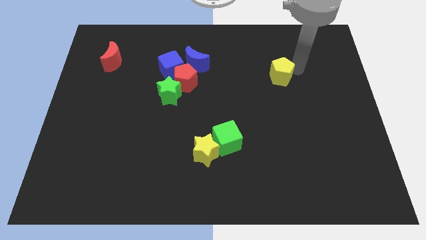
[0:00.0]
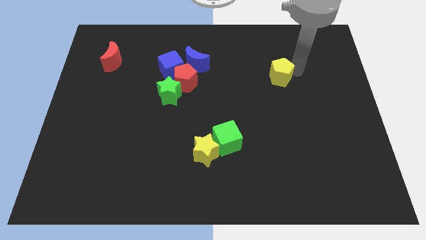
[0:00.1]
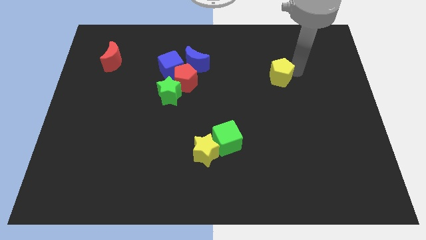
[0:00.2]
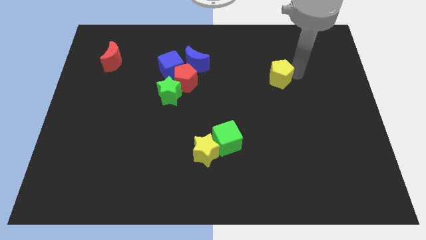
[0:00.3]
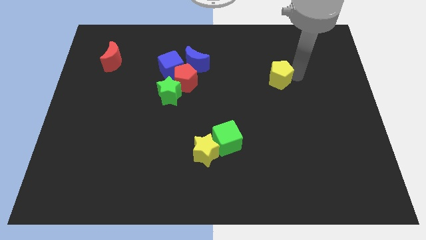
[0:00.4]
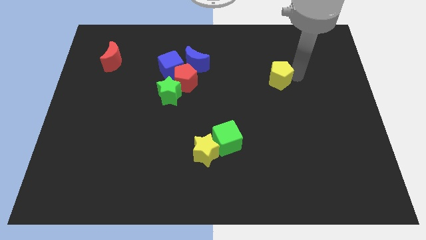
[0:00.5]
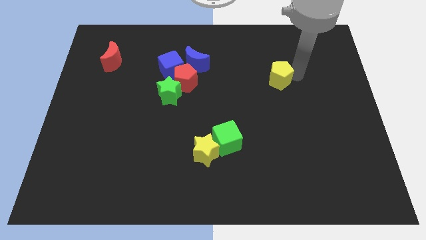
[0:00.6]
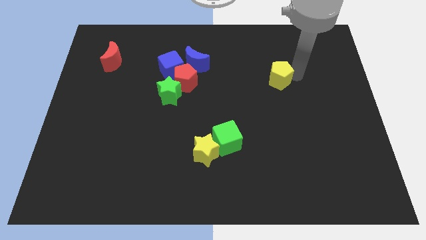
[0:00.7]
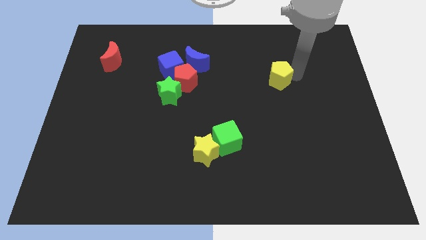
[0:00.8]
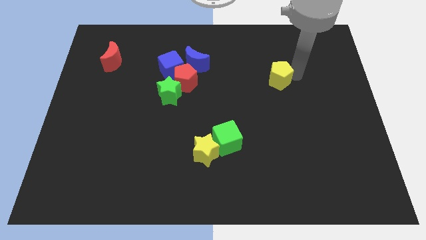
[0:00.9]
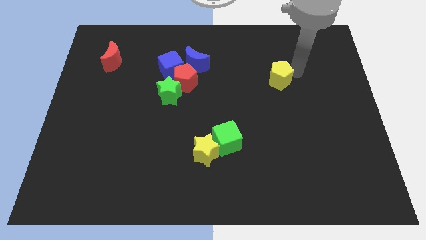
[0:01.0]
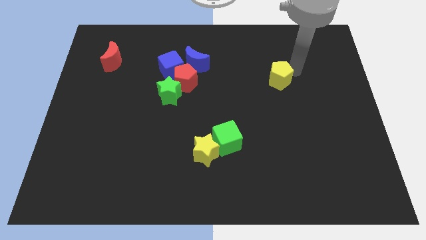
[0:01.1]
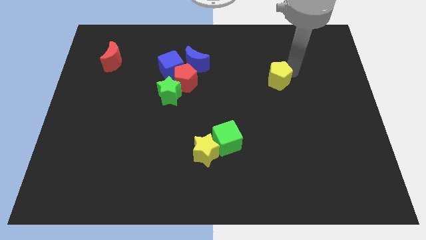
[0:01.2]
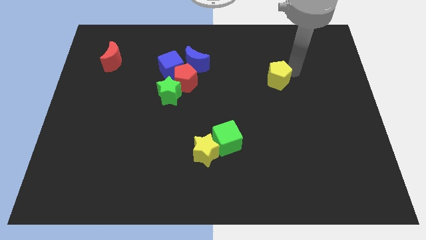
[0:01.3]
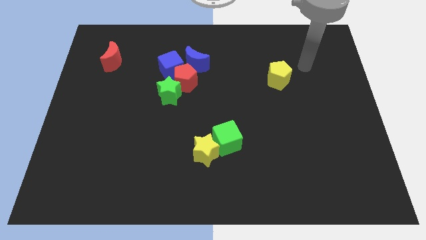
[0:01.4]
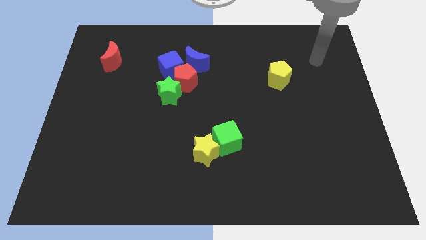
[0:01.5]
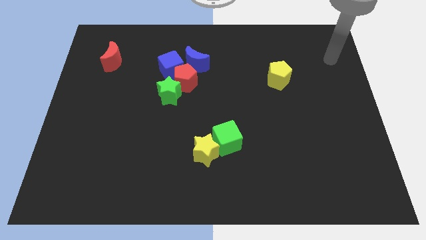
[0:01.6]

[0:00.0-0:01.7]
place the yellow pentagon horizontal to the red pentagon

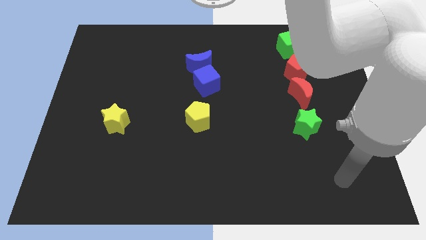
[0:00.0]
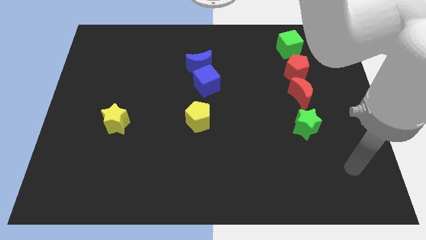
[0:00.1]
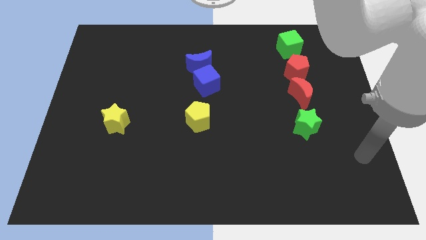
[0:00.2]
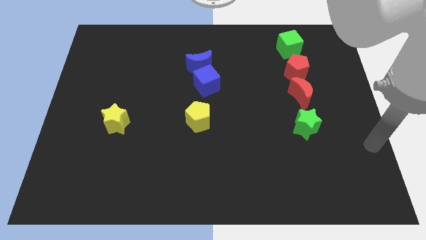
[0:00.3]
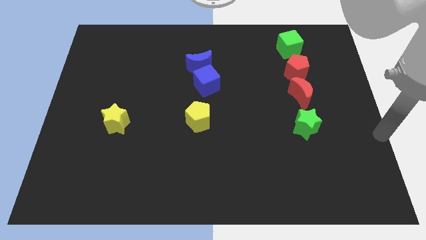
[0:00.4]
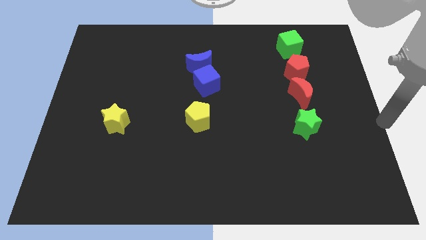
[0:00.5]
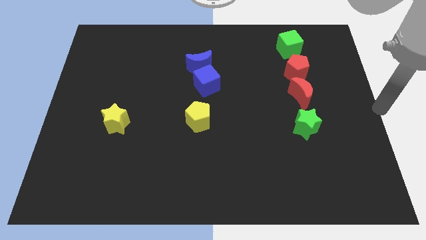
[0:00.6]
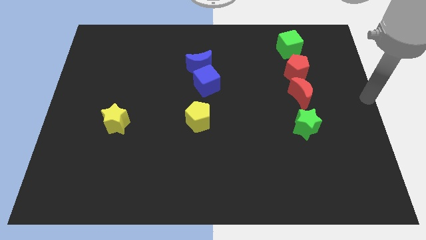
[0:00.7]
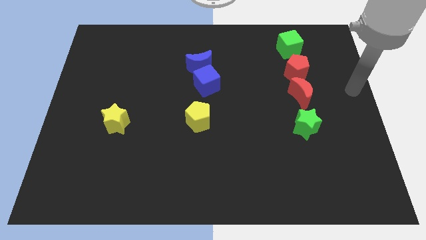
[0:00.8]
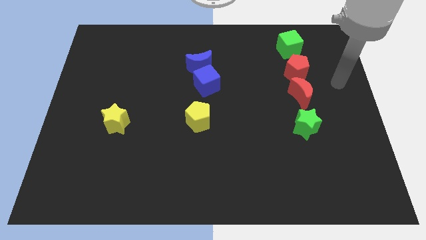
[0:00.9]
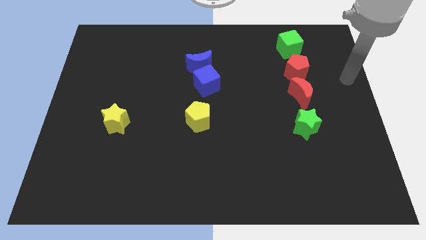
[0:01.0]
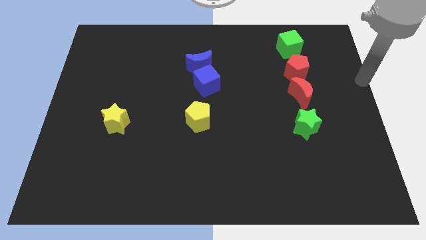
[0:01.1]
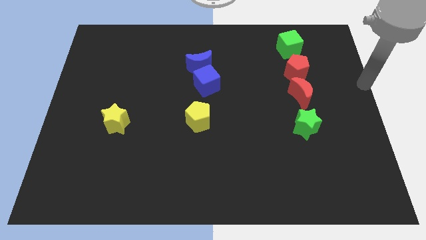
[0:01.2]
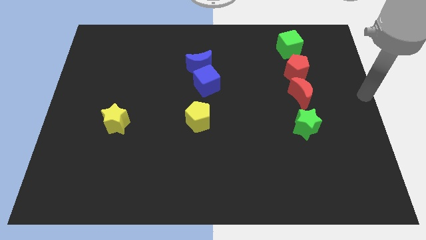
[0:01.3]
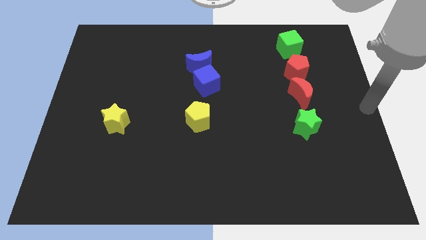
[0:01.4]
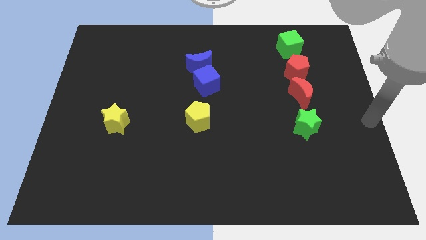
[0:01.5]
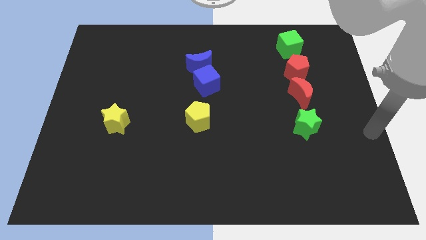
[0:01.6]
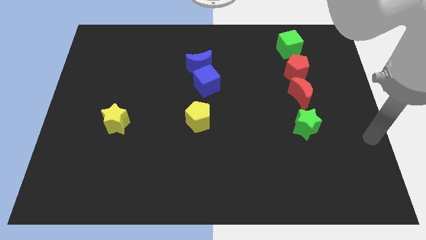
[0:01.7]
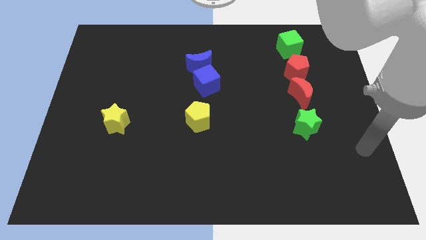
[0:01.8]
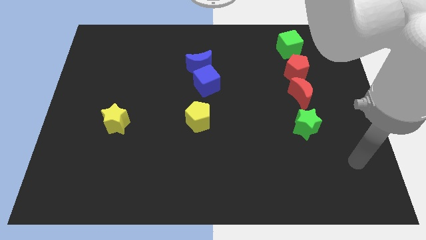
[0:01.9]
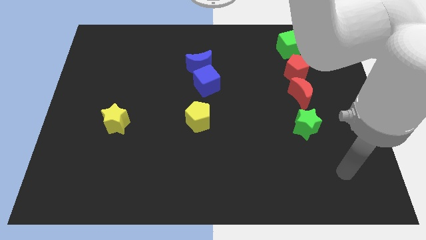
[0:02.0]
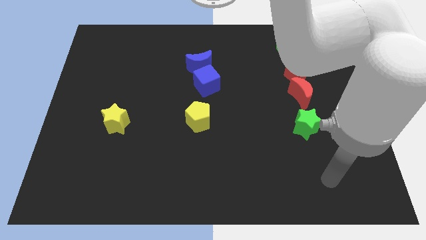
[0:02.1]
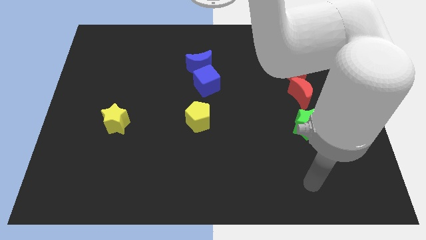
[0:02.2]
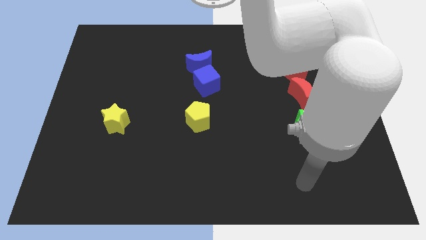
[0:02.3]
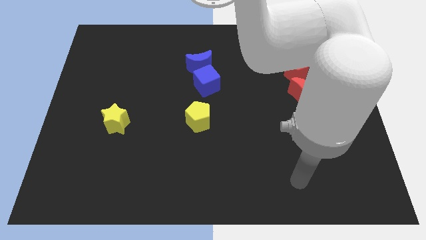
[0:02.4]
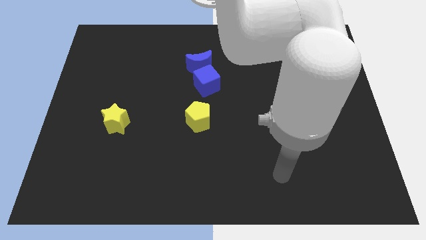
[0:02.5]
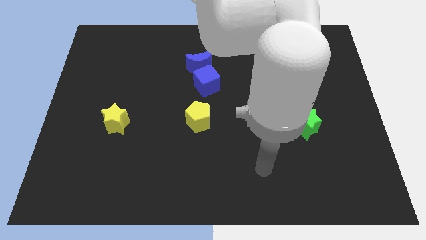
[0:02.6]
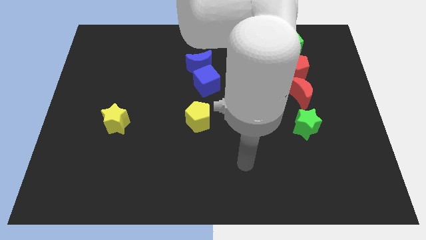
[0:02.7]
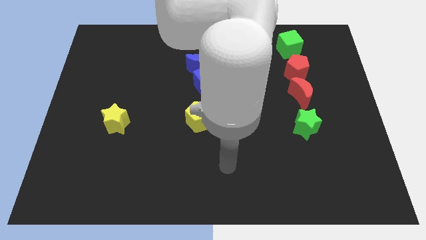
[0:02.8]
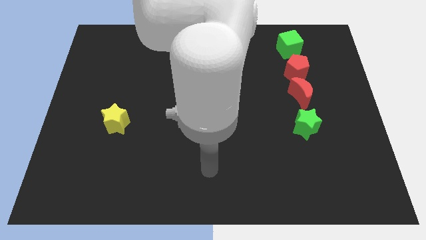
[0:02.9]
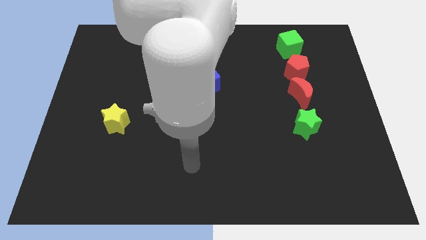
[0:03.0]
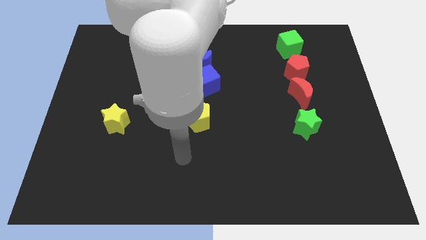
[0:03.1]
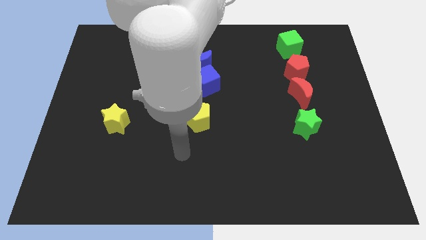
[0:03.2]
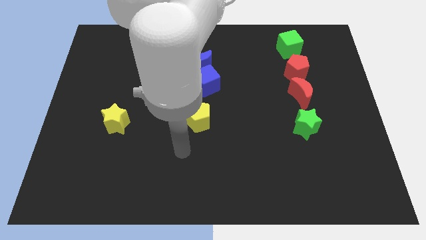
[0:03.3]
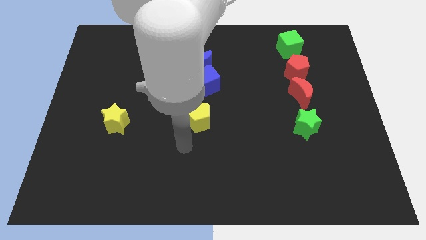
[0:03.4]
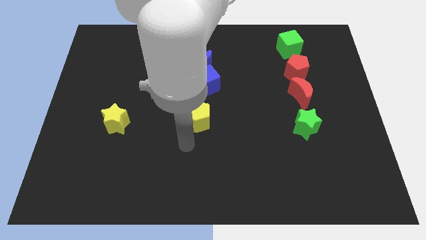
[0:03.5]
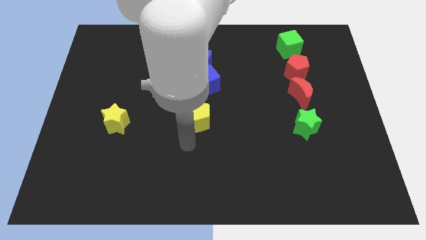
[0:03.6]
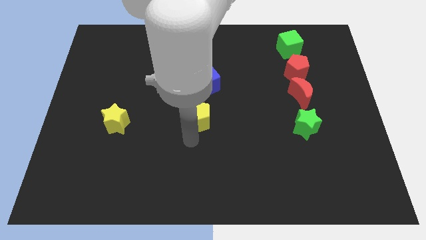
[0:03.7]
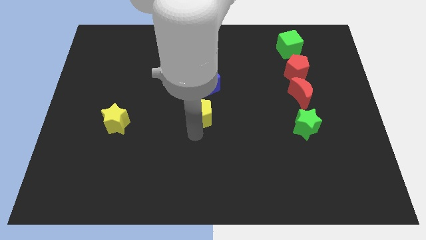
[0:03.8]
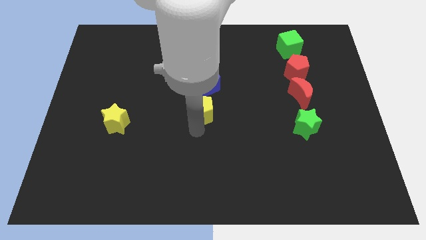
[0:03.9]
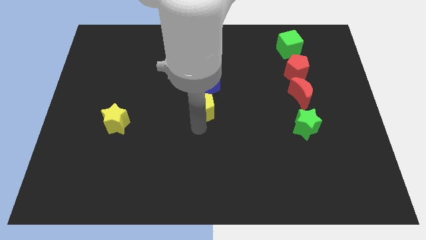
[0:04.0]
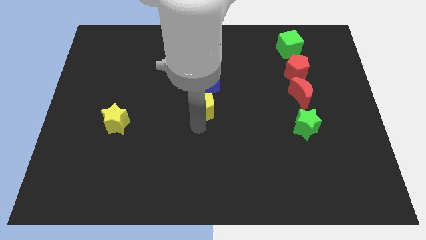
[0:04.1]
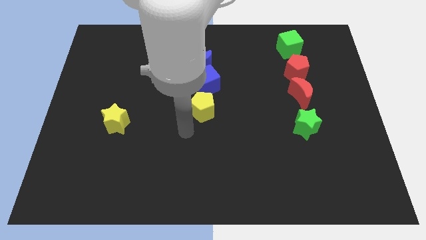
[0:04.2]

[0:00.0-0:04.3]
push the yellow pentagon into the blue cube

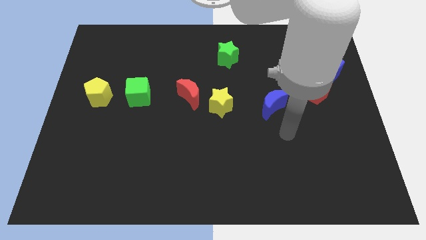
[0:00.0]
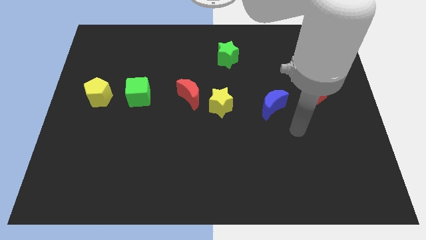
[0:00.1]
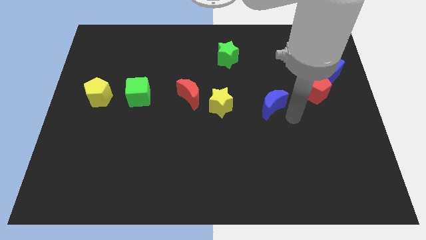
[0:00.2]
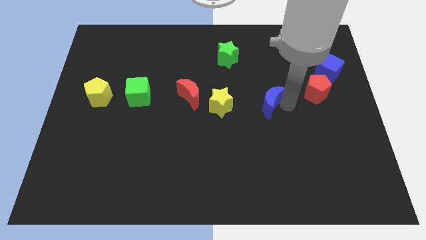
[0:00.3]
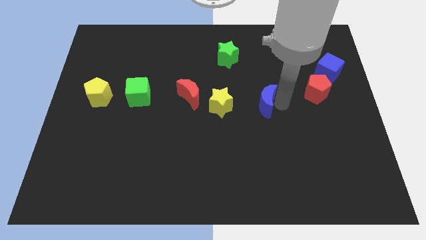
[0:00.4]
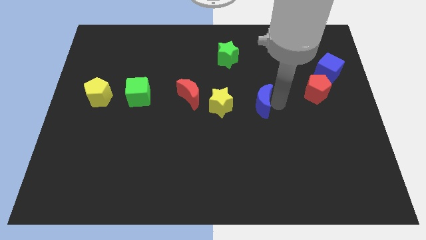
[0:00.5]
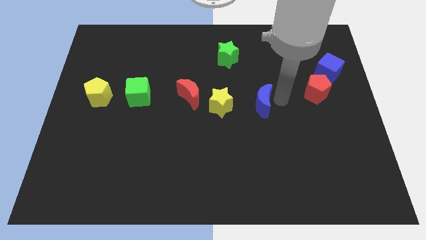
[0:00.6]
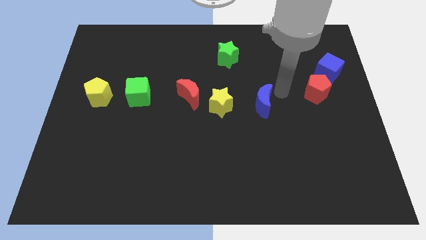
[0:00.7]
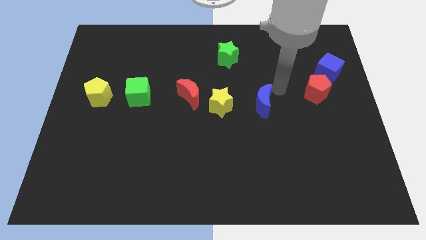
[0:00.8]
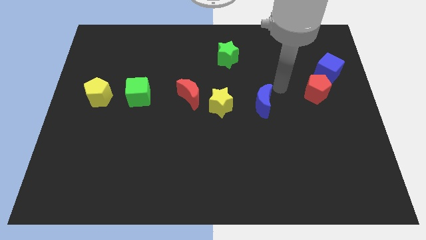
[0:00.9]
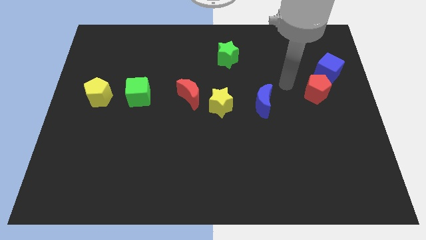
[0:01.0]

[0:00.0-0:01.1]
move the blue crescent to the right side of the yellow star

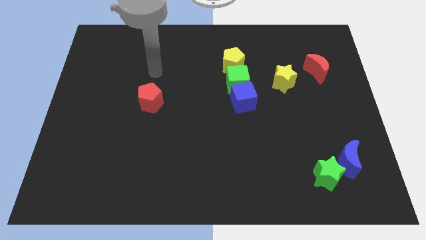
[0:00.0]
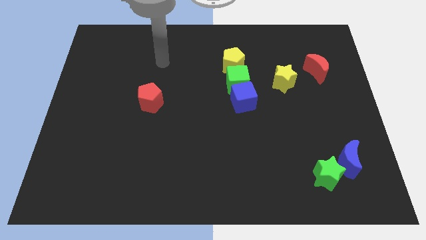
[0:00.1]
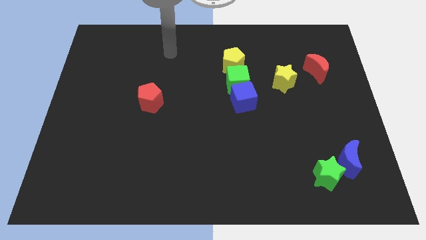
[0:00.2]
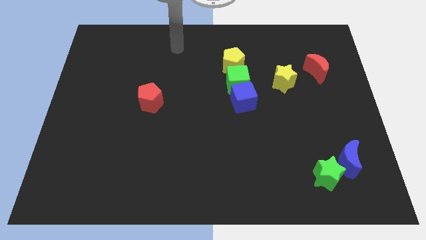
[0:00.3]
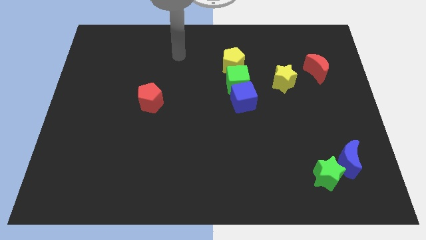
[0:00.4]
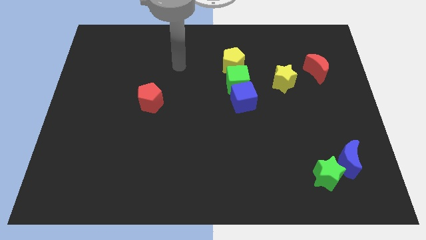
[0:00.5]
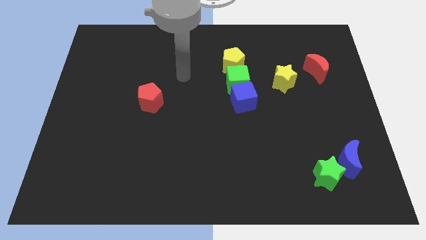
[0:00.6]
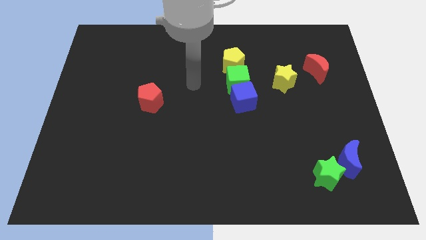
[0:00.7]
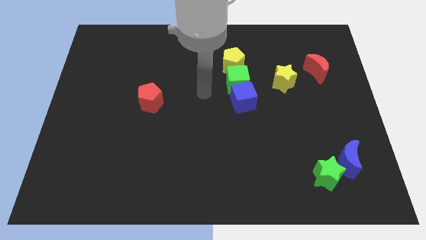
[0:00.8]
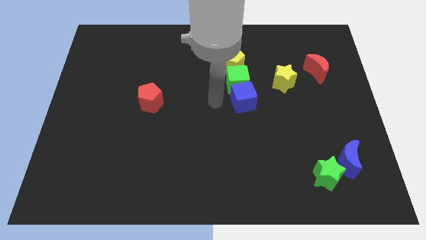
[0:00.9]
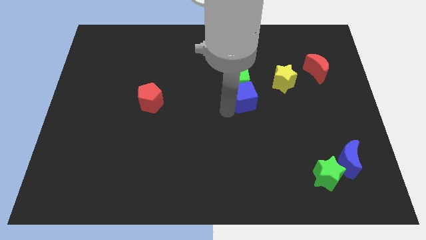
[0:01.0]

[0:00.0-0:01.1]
move your arm towards the blue cube

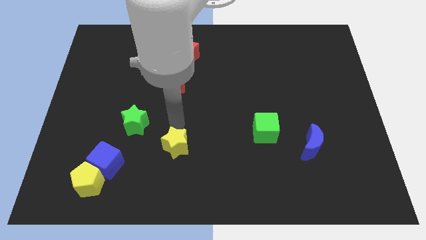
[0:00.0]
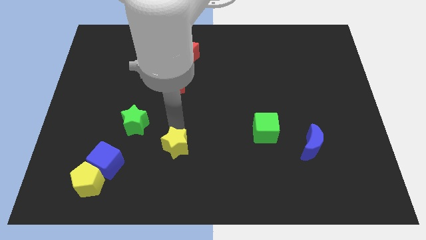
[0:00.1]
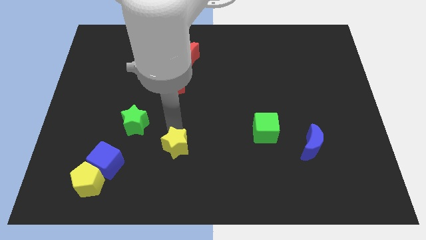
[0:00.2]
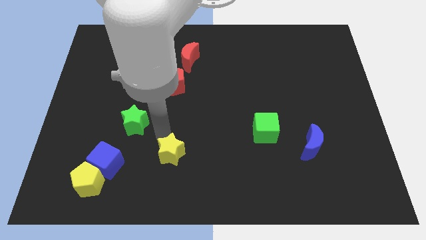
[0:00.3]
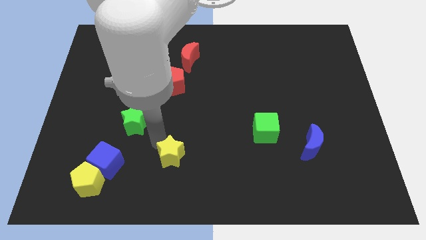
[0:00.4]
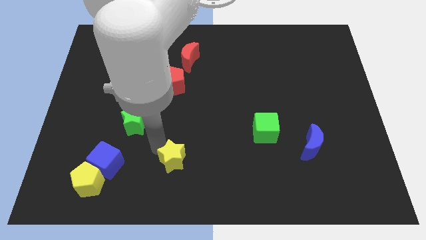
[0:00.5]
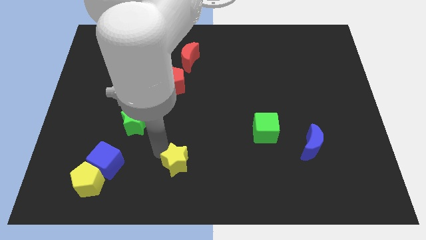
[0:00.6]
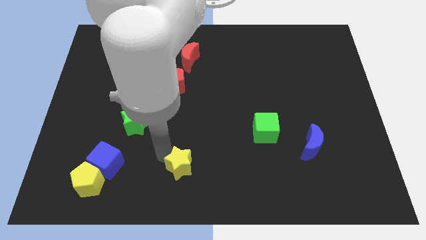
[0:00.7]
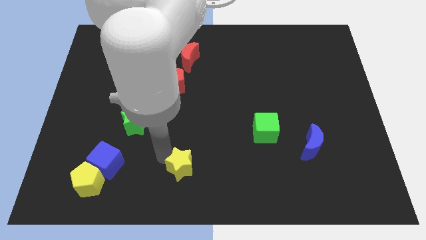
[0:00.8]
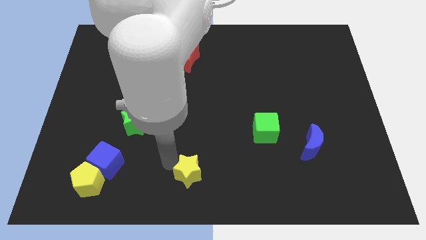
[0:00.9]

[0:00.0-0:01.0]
push yellow star parallel right to blue cube
